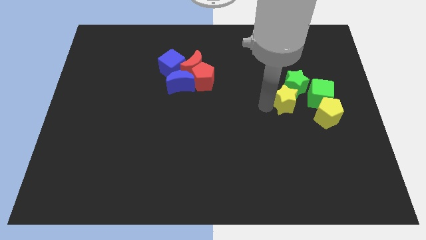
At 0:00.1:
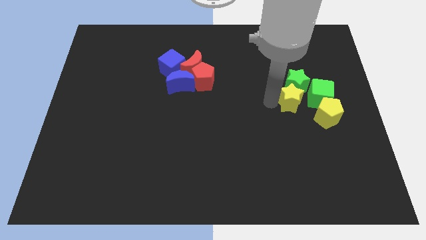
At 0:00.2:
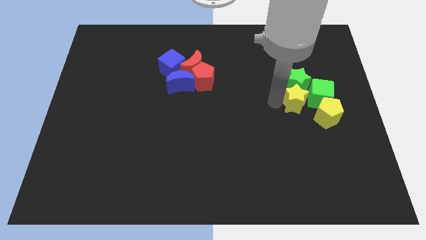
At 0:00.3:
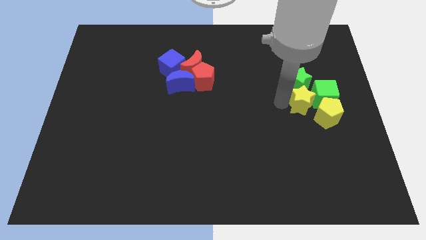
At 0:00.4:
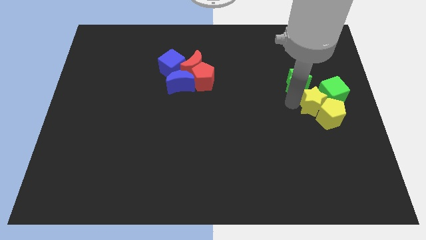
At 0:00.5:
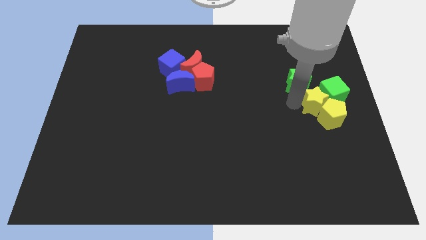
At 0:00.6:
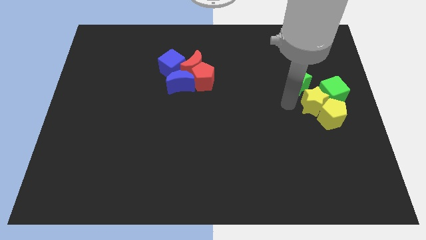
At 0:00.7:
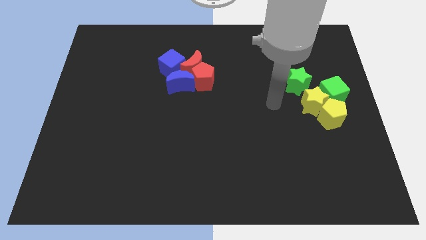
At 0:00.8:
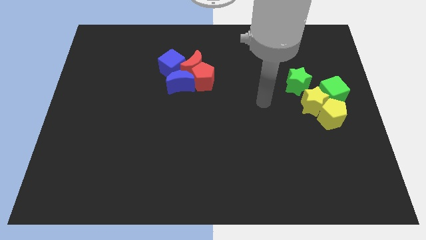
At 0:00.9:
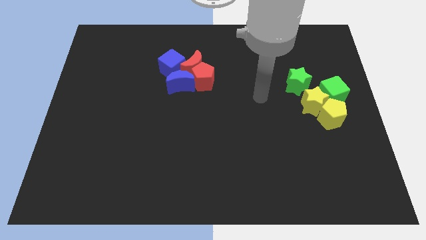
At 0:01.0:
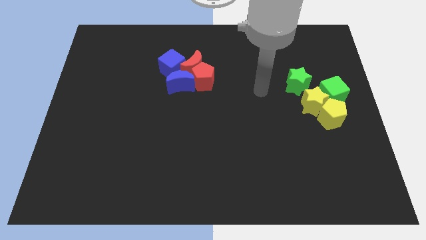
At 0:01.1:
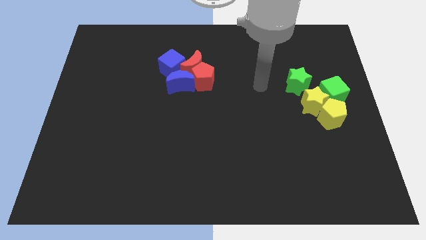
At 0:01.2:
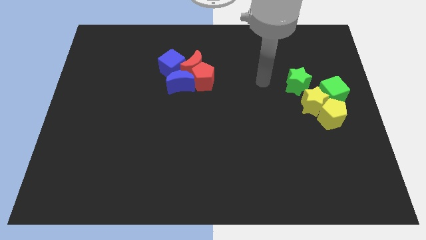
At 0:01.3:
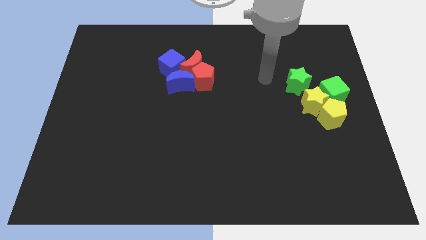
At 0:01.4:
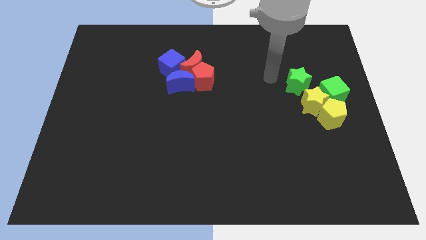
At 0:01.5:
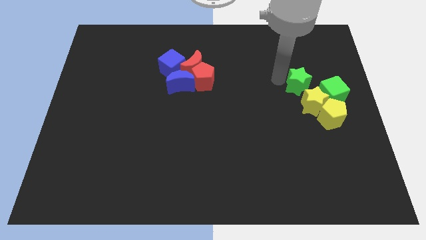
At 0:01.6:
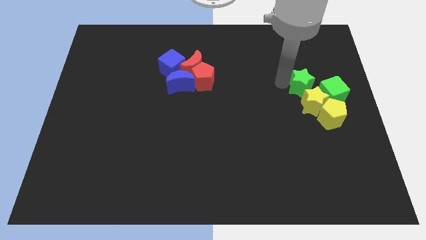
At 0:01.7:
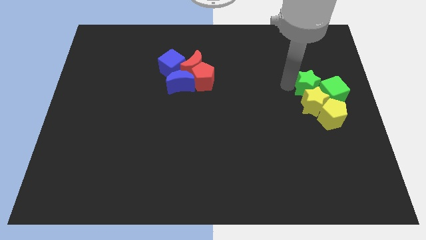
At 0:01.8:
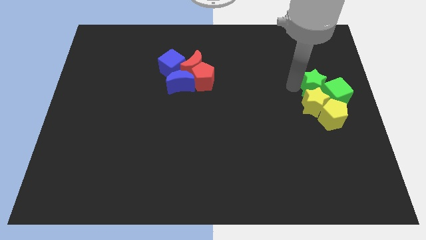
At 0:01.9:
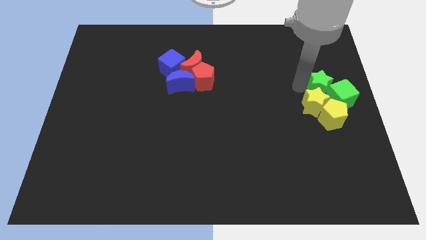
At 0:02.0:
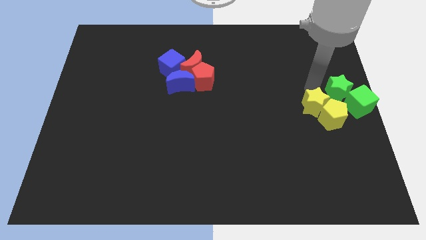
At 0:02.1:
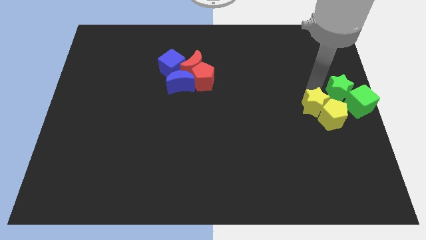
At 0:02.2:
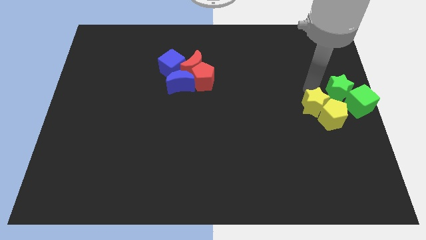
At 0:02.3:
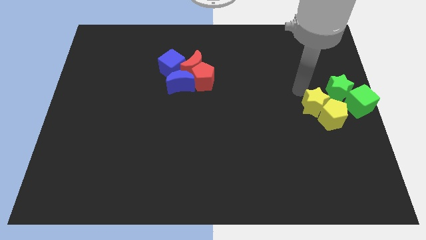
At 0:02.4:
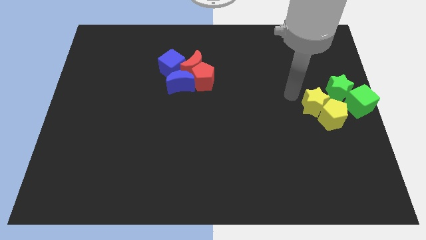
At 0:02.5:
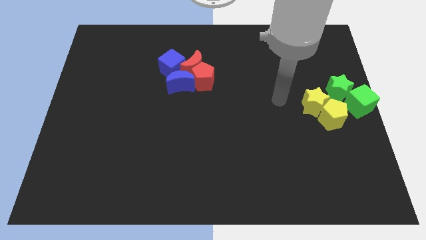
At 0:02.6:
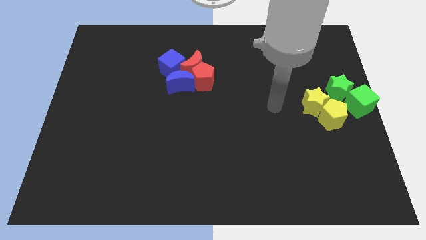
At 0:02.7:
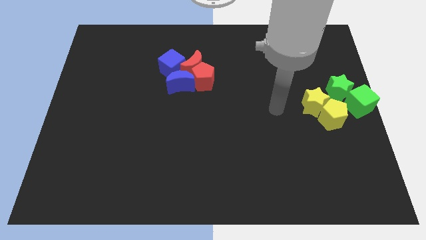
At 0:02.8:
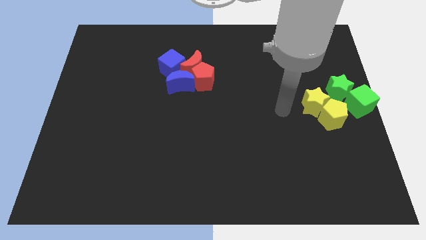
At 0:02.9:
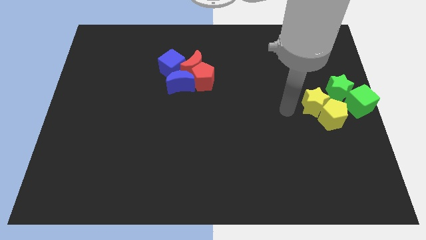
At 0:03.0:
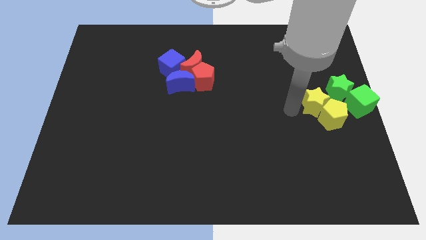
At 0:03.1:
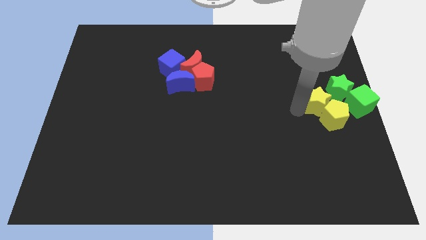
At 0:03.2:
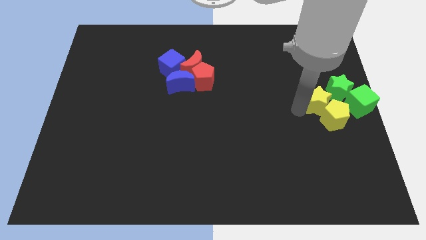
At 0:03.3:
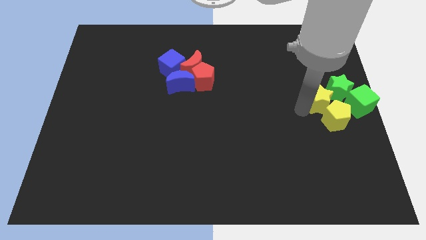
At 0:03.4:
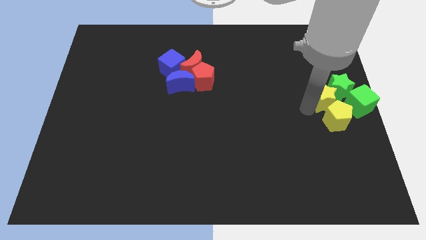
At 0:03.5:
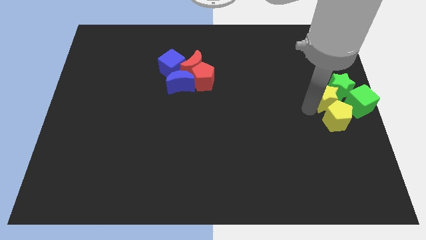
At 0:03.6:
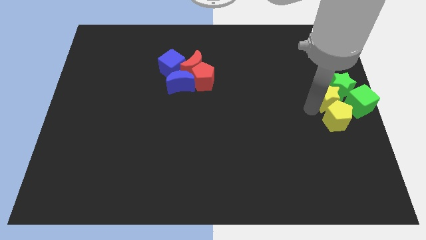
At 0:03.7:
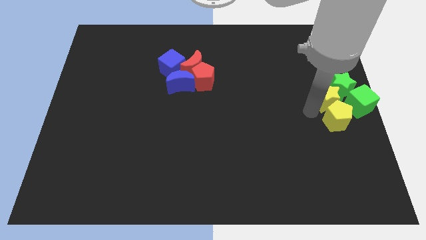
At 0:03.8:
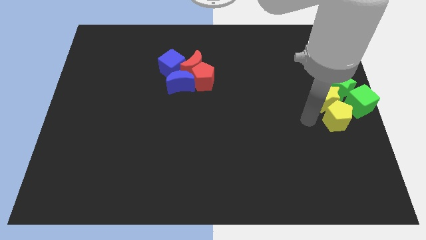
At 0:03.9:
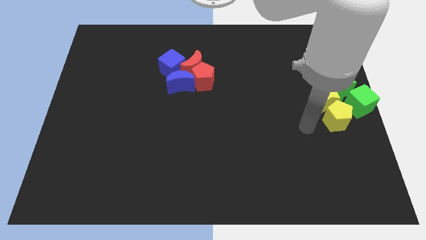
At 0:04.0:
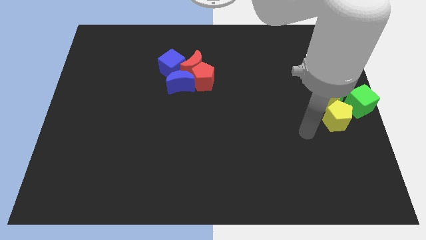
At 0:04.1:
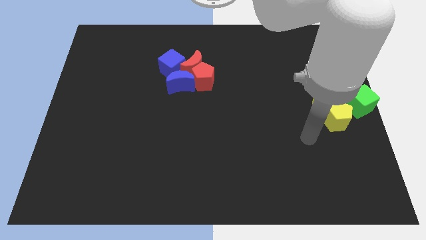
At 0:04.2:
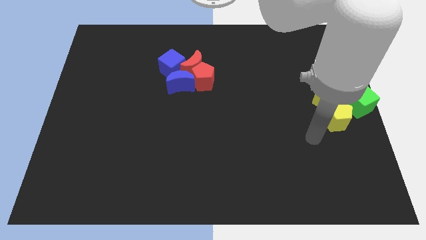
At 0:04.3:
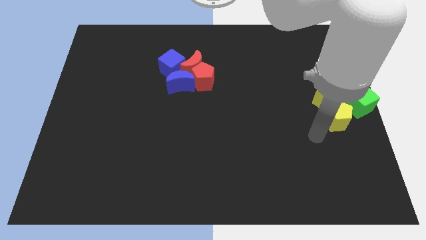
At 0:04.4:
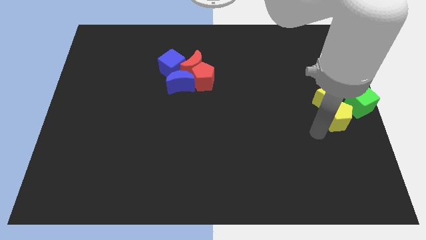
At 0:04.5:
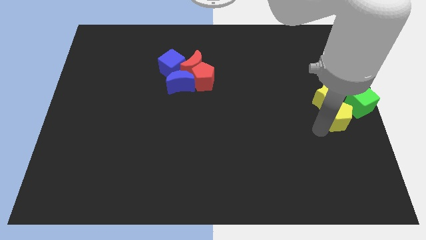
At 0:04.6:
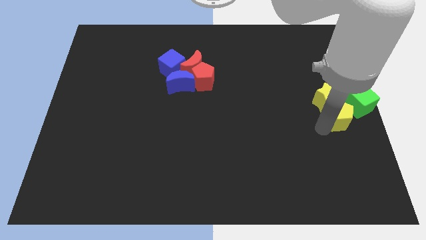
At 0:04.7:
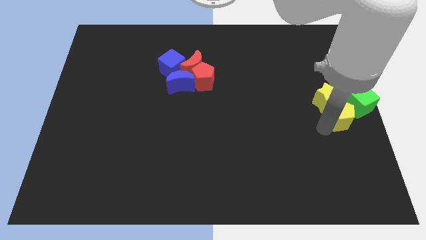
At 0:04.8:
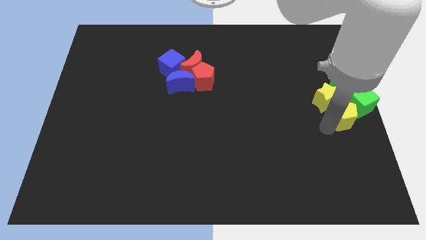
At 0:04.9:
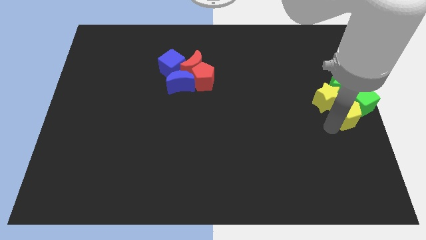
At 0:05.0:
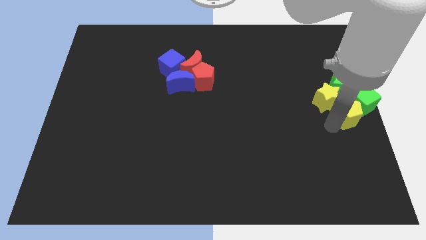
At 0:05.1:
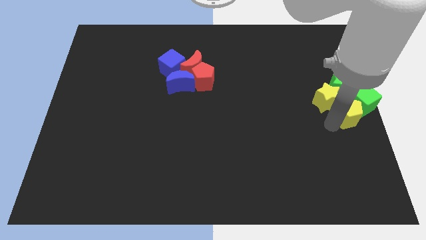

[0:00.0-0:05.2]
slide the group of blocks to the center right of the table

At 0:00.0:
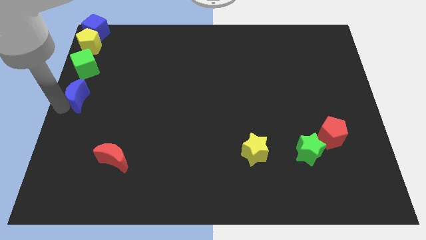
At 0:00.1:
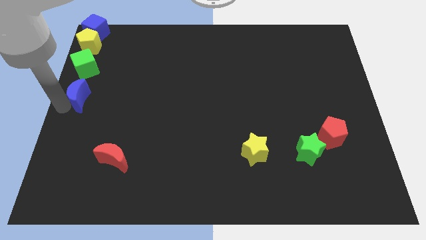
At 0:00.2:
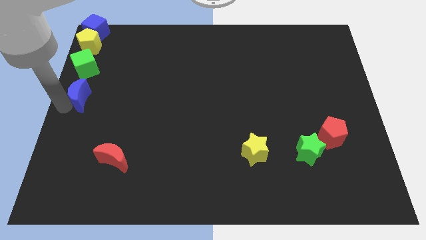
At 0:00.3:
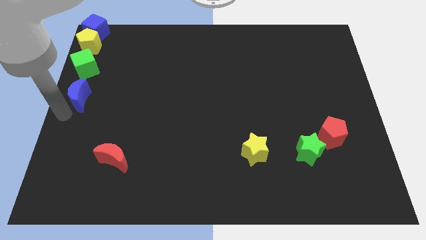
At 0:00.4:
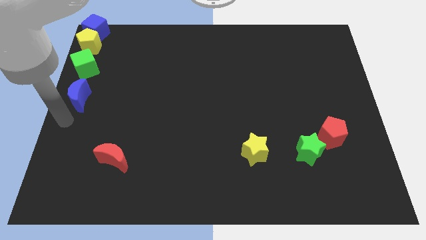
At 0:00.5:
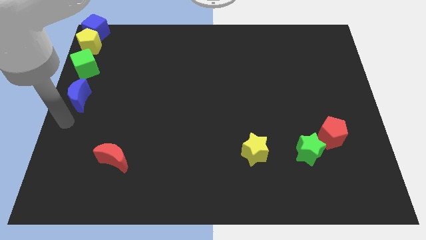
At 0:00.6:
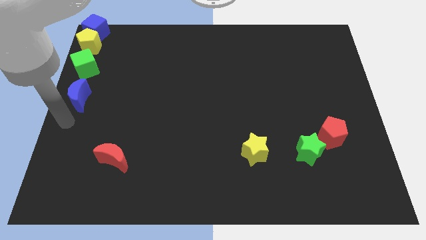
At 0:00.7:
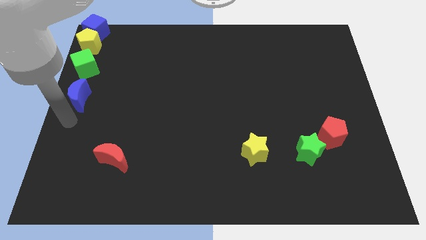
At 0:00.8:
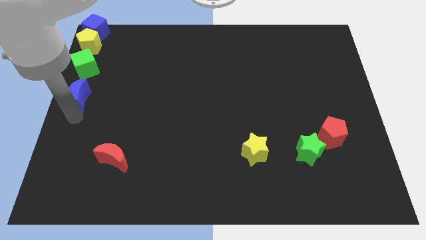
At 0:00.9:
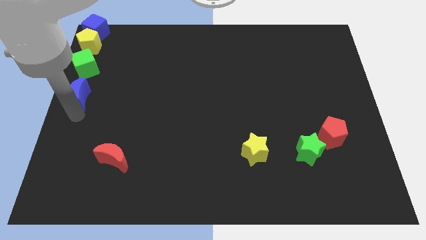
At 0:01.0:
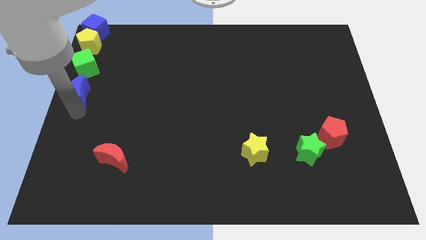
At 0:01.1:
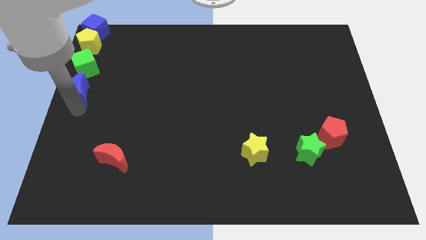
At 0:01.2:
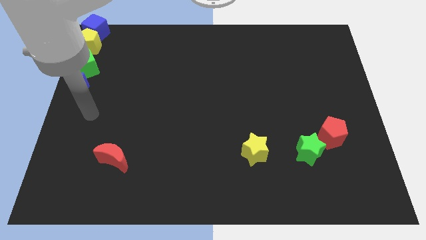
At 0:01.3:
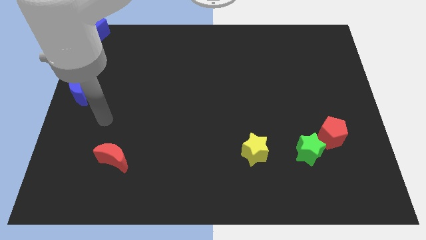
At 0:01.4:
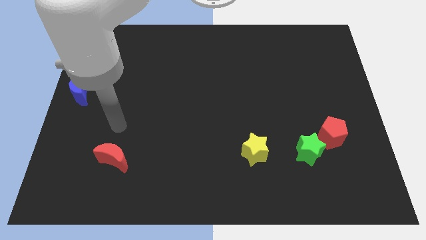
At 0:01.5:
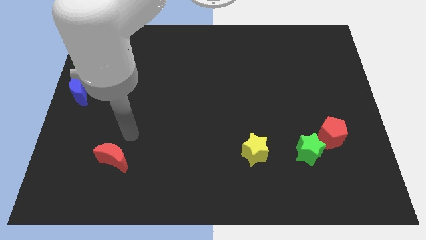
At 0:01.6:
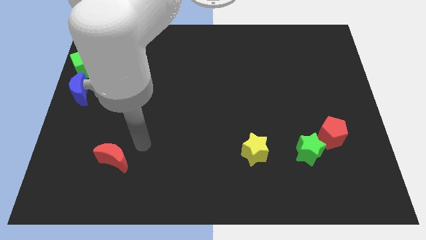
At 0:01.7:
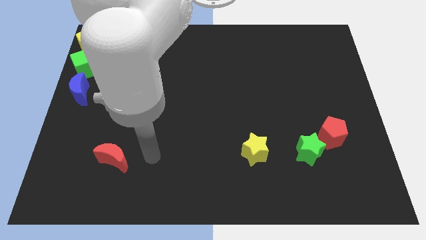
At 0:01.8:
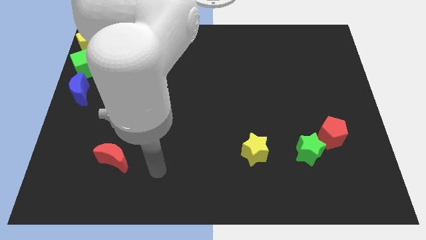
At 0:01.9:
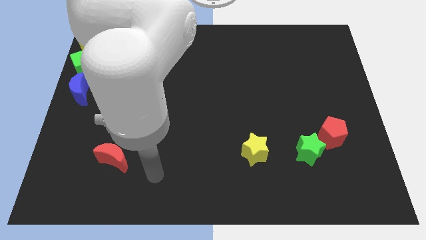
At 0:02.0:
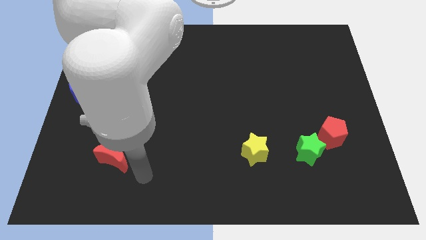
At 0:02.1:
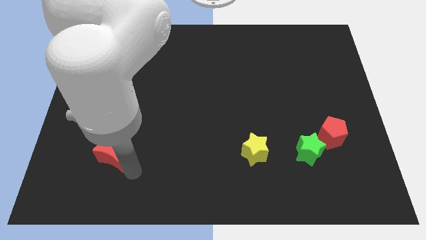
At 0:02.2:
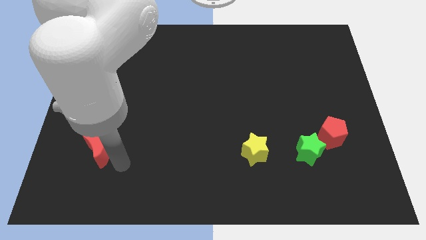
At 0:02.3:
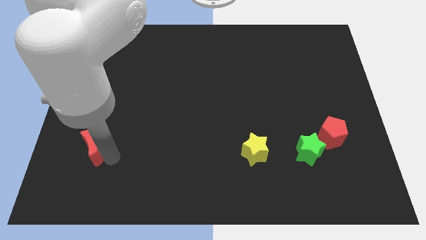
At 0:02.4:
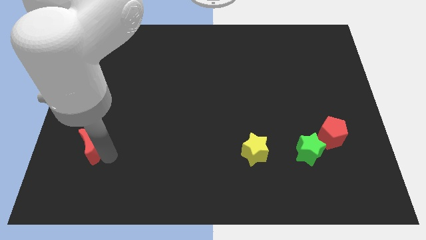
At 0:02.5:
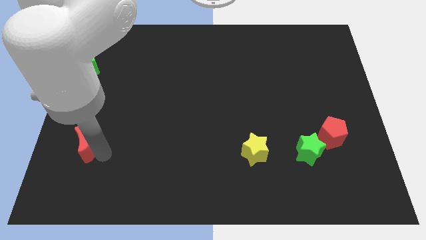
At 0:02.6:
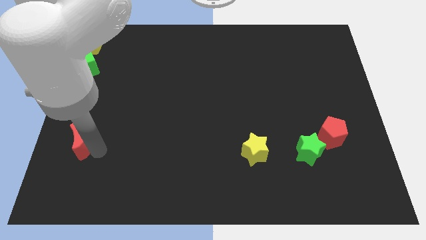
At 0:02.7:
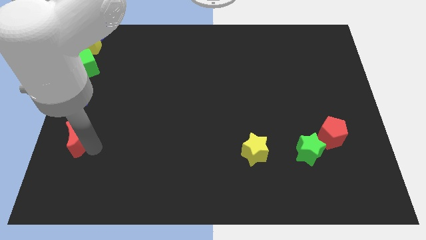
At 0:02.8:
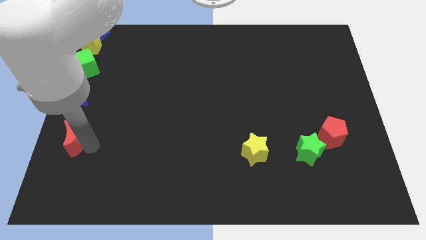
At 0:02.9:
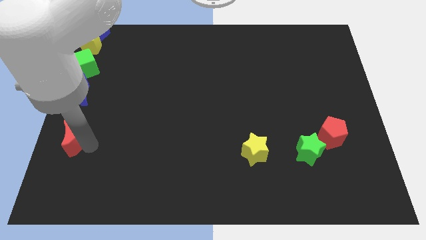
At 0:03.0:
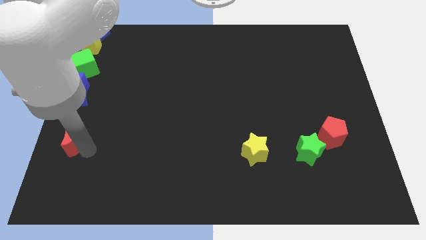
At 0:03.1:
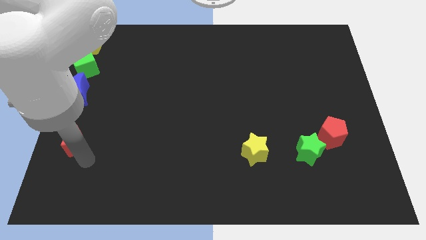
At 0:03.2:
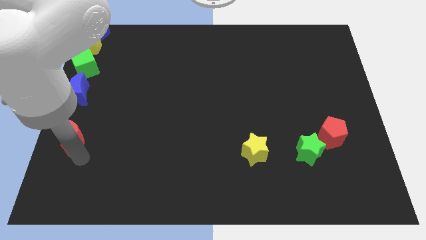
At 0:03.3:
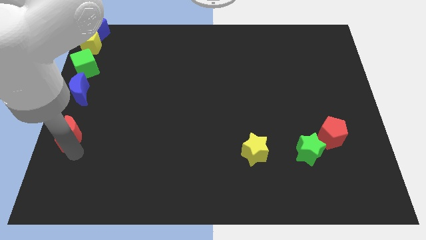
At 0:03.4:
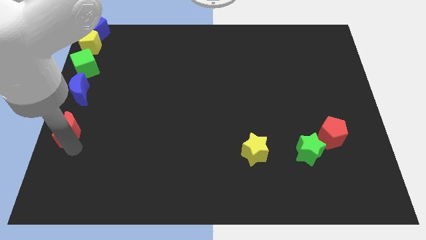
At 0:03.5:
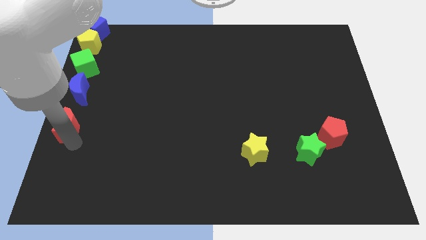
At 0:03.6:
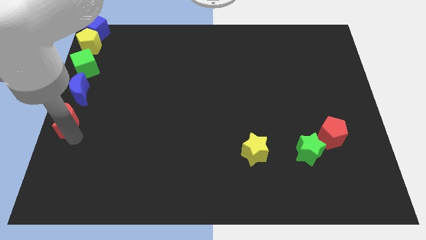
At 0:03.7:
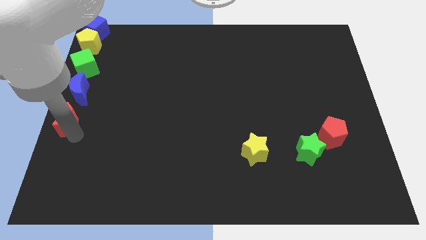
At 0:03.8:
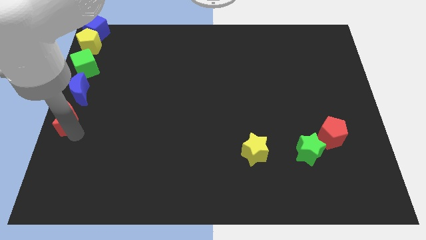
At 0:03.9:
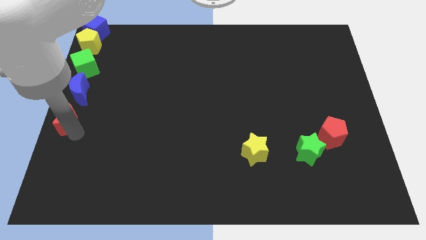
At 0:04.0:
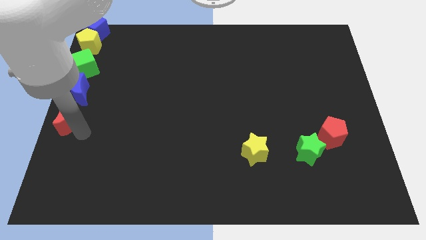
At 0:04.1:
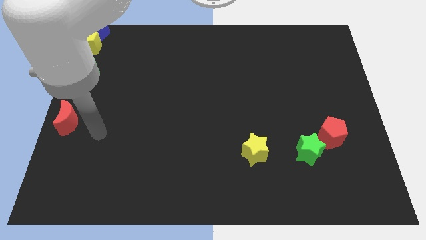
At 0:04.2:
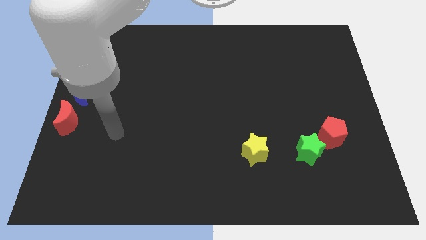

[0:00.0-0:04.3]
put the red moon below the blue crescent
